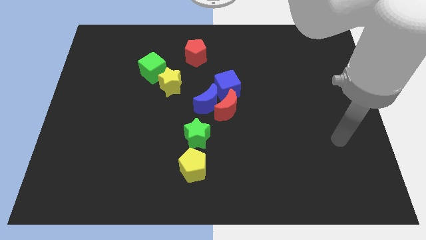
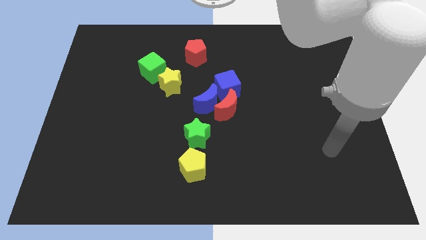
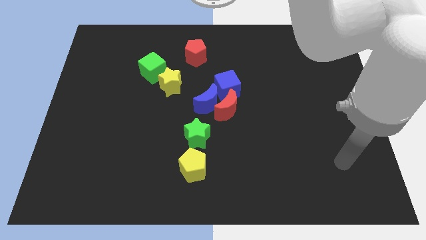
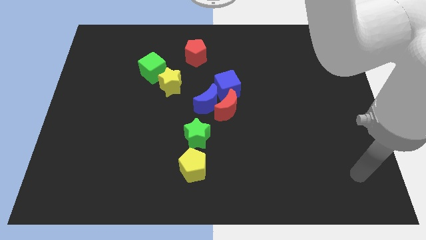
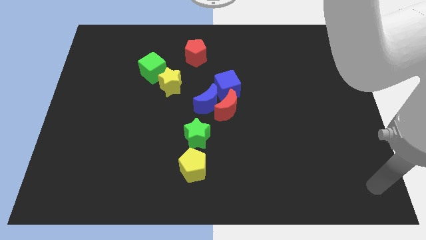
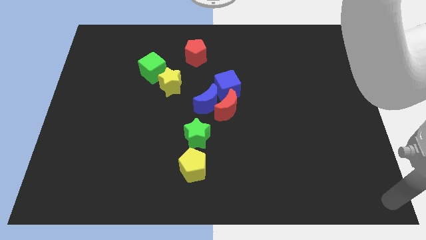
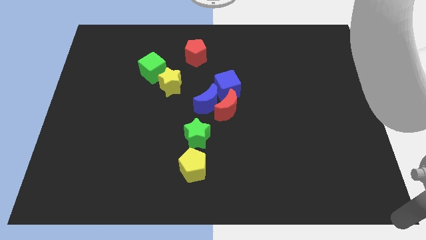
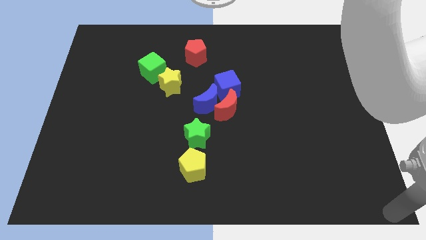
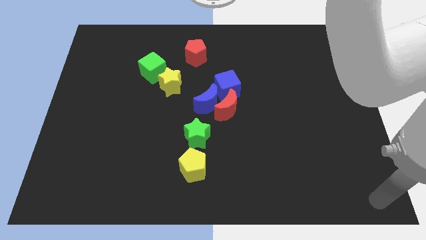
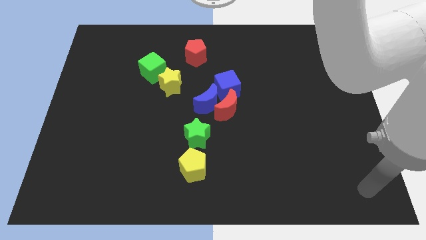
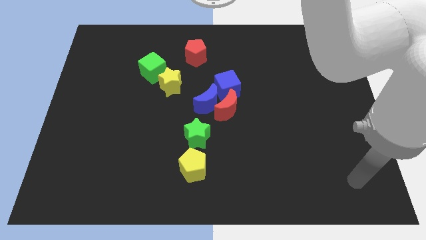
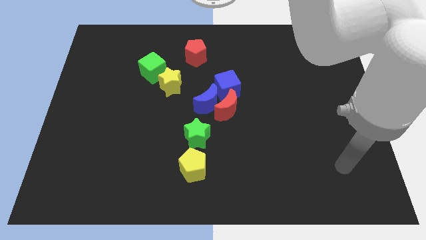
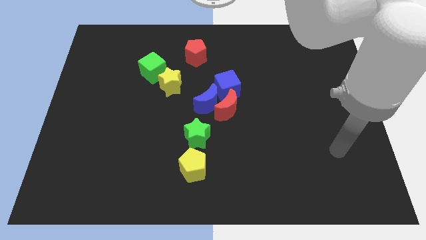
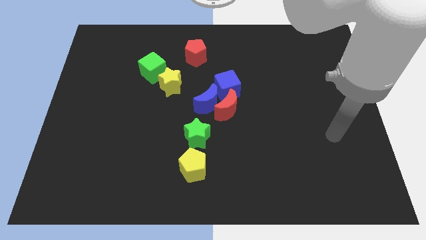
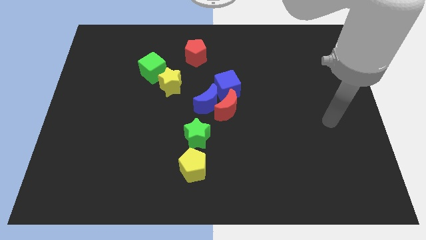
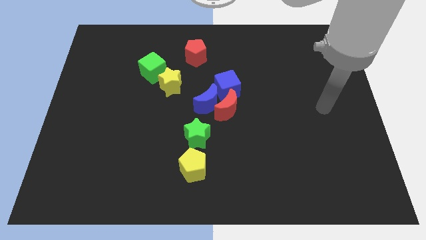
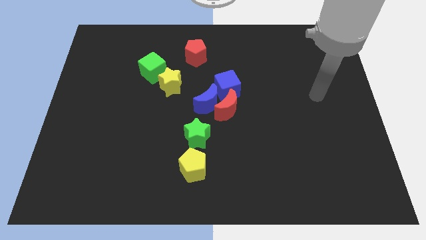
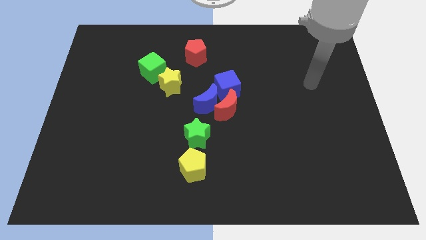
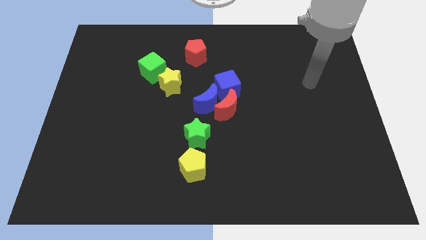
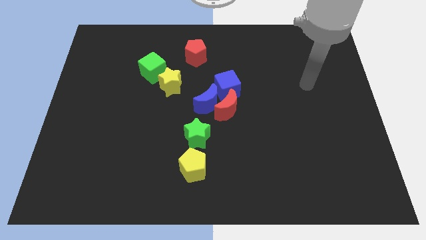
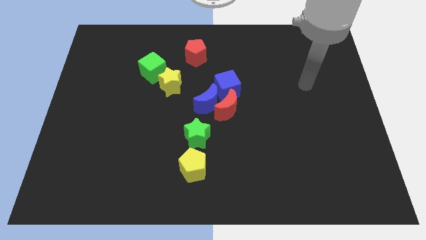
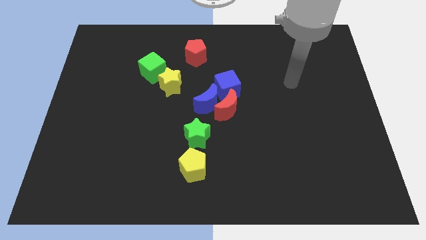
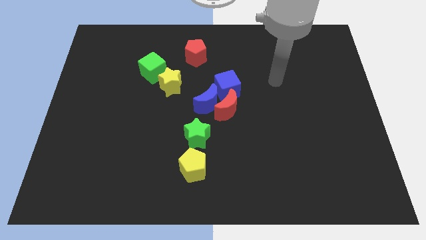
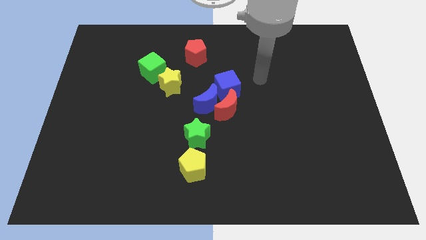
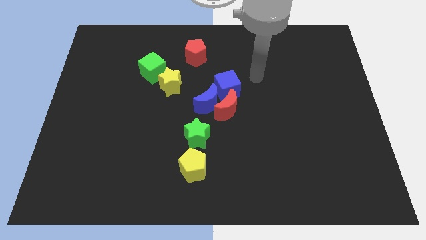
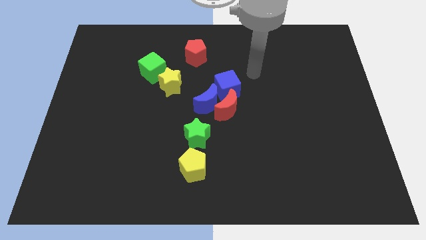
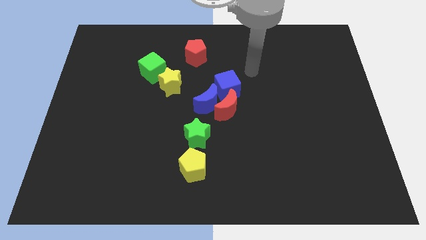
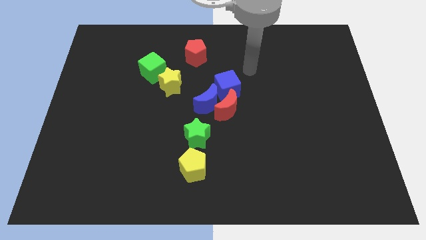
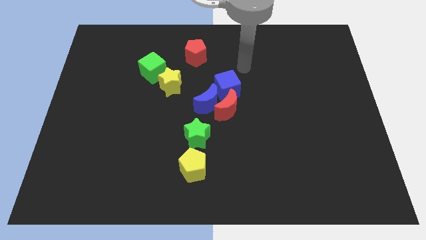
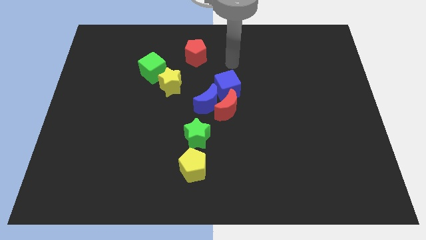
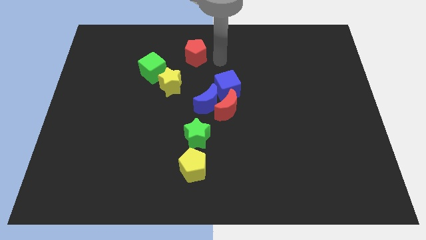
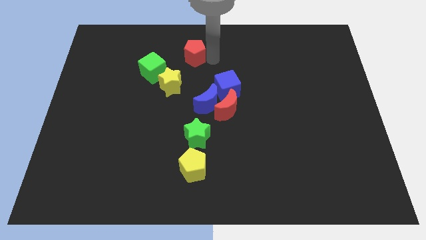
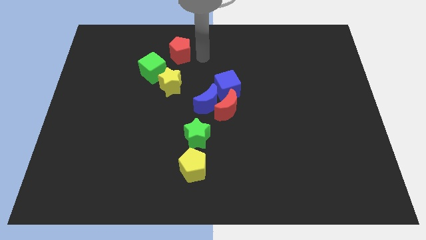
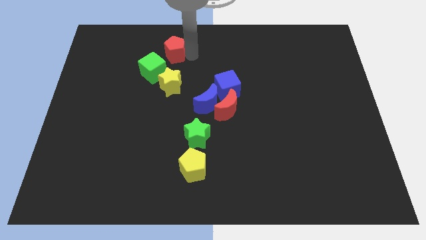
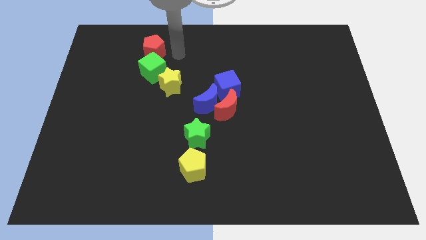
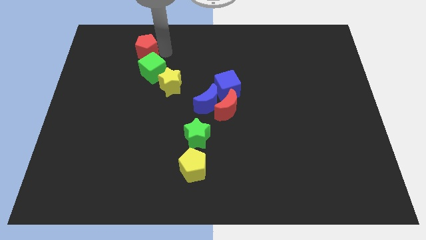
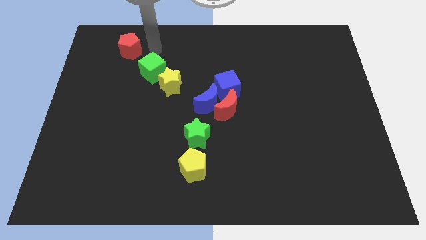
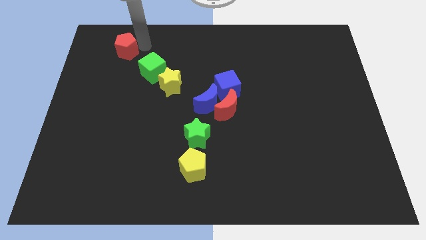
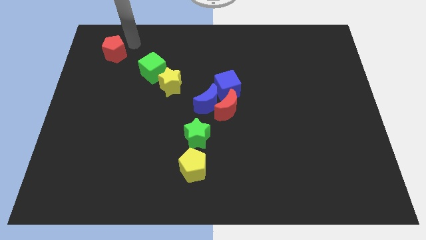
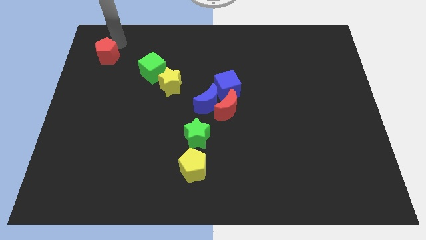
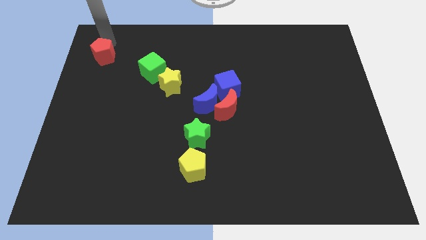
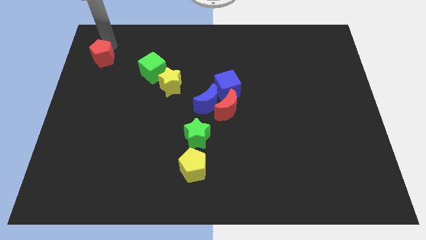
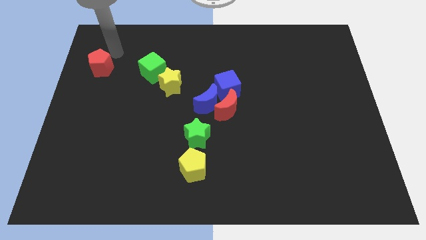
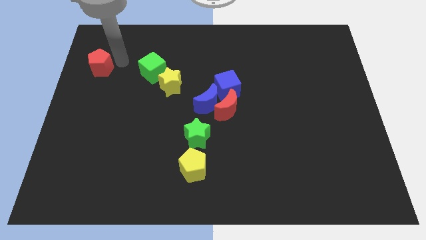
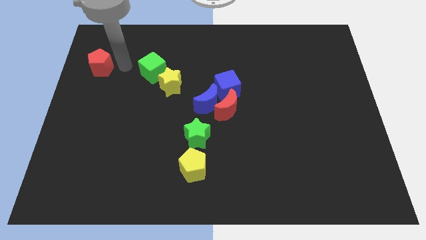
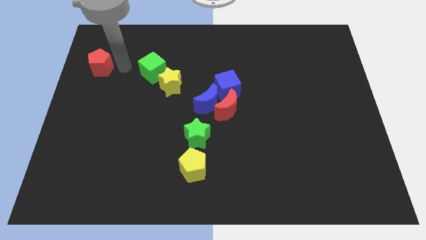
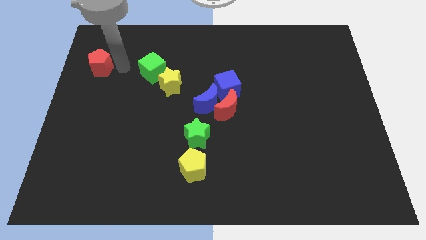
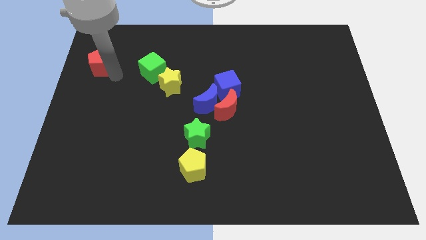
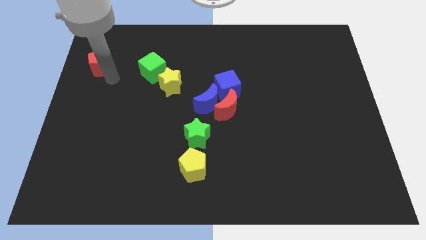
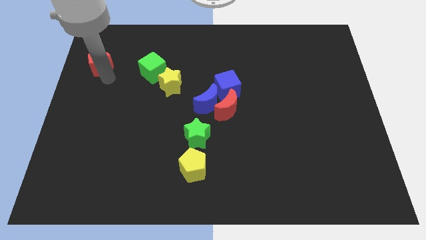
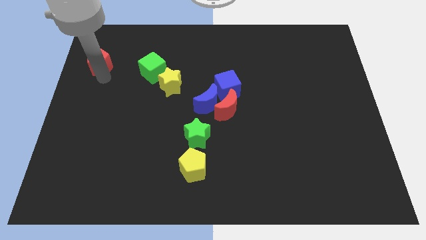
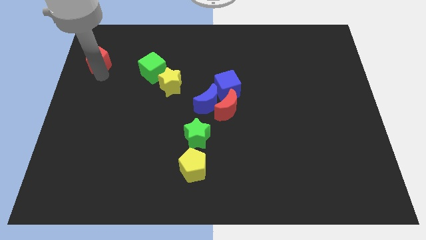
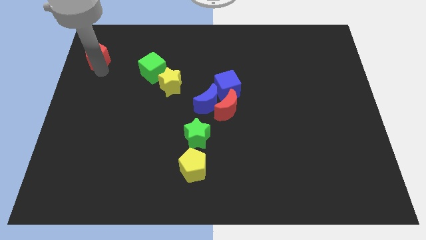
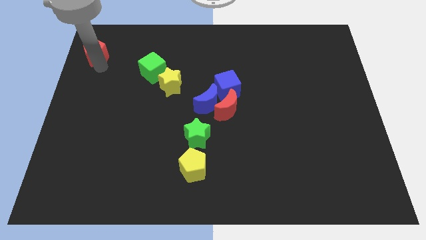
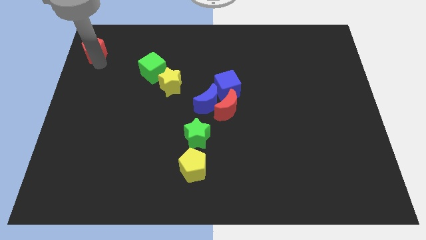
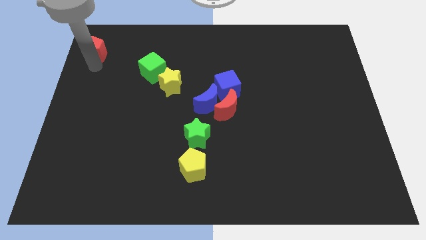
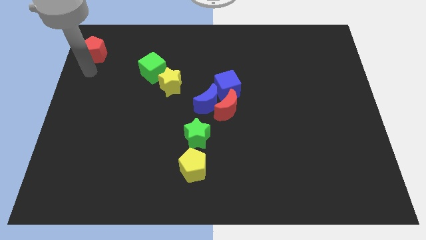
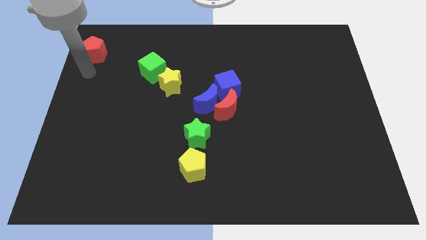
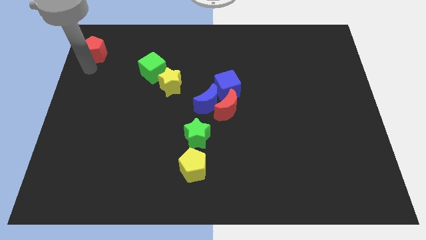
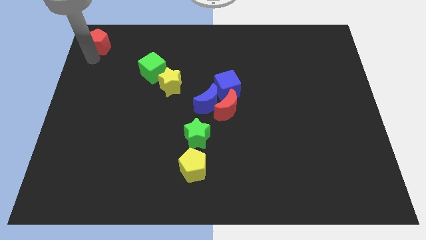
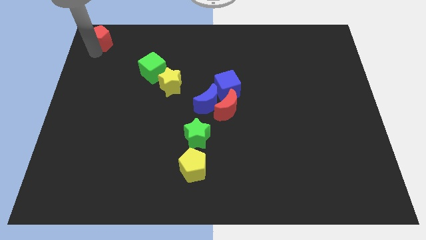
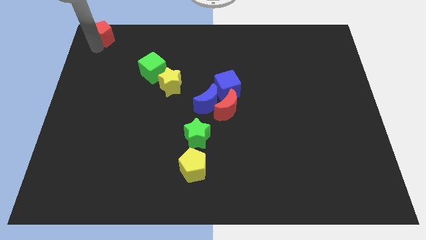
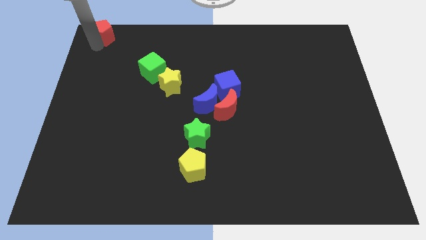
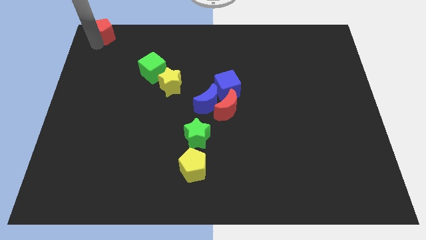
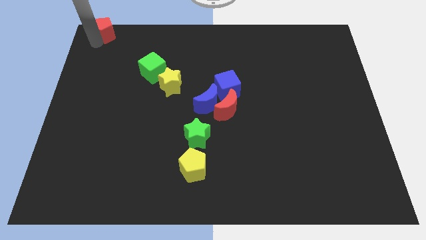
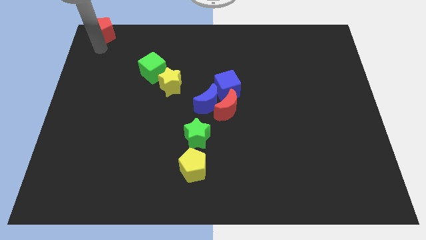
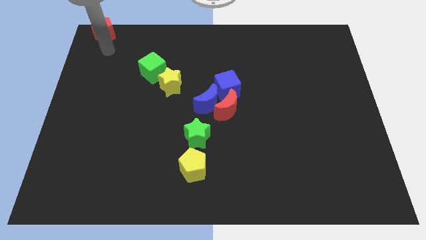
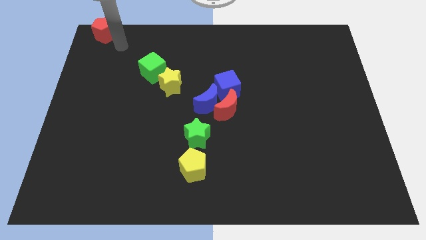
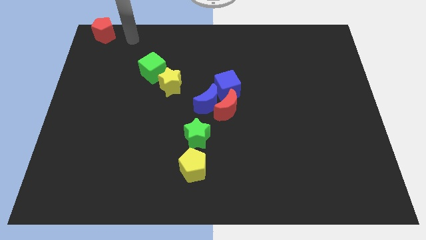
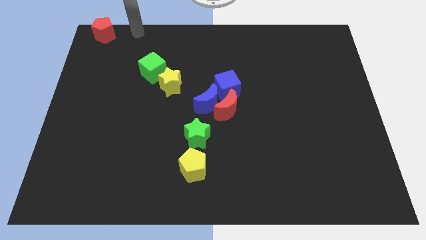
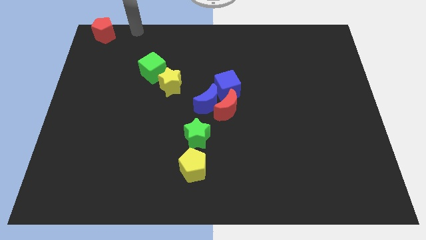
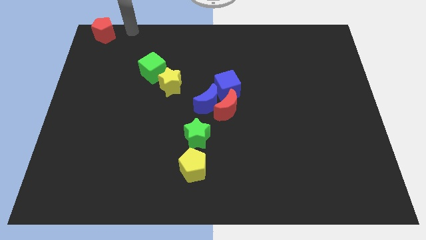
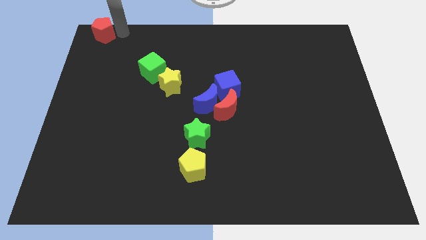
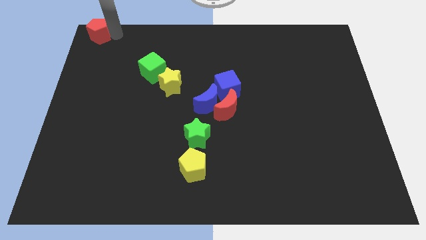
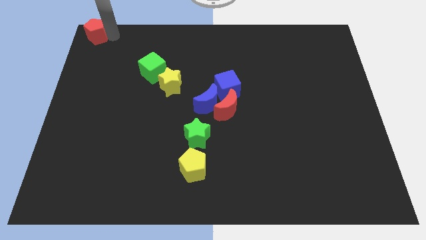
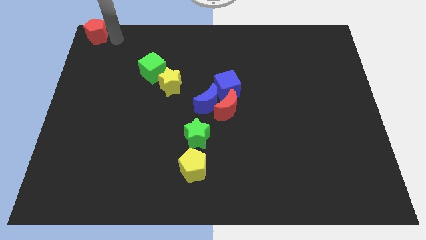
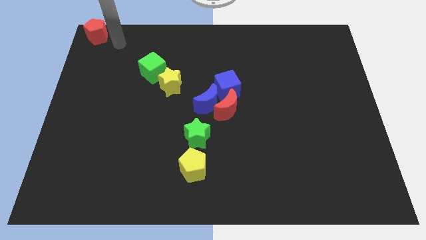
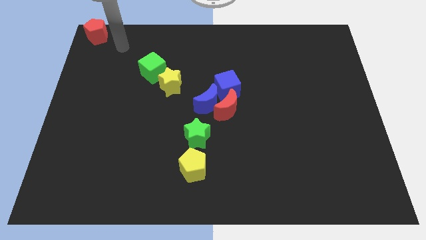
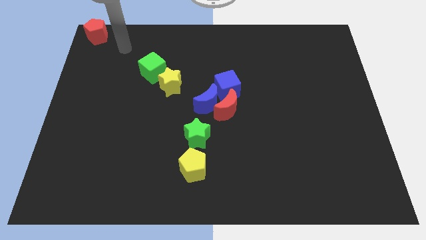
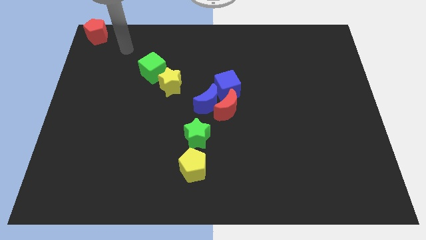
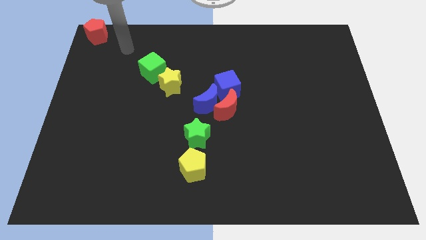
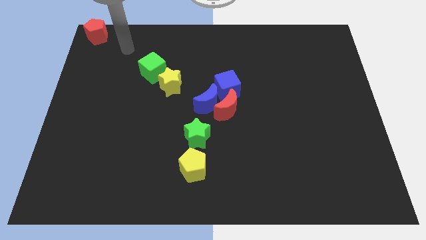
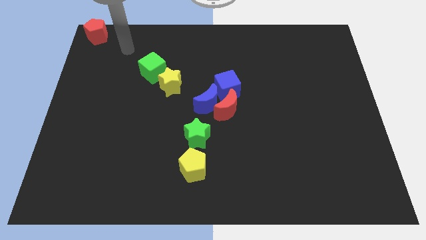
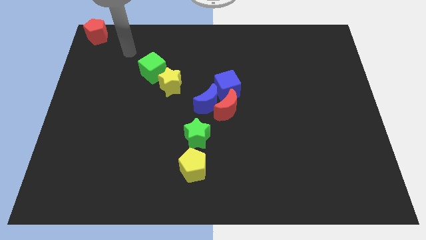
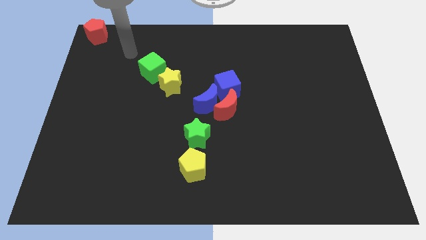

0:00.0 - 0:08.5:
move the red pentagon to the top left corner

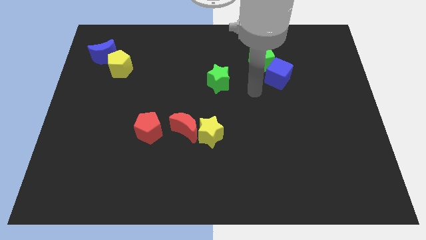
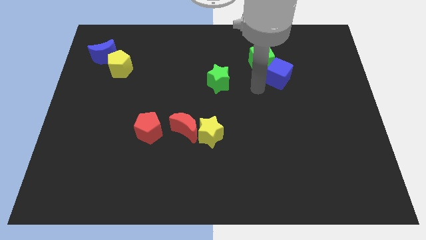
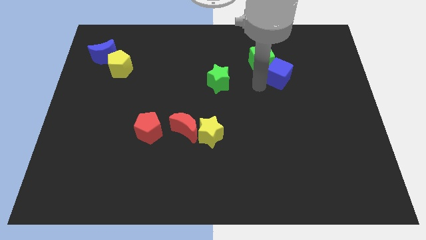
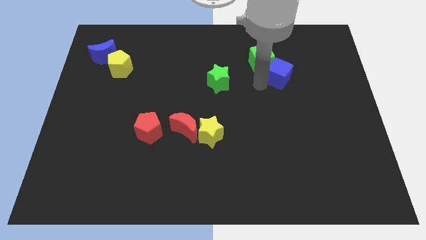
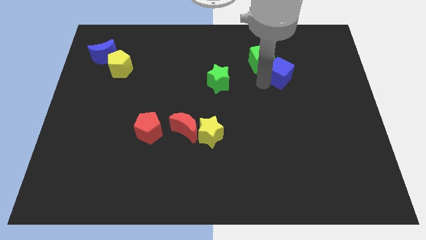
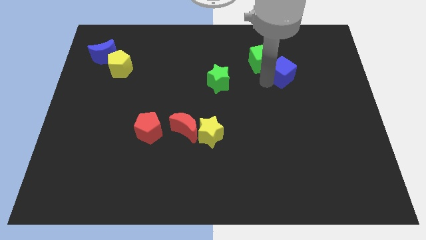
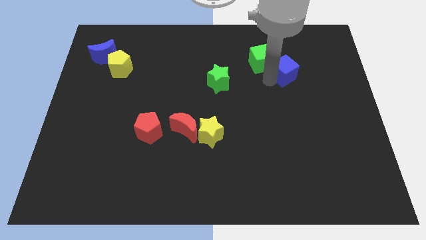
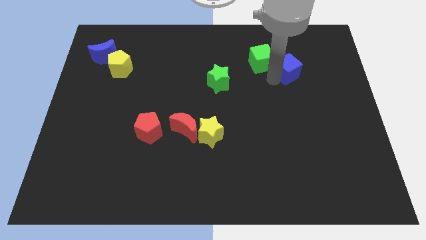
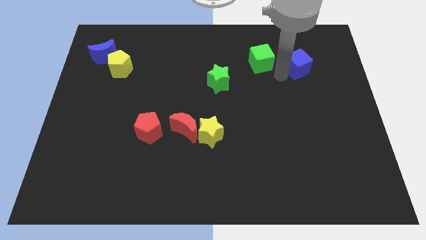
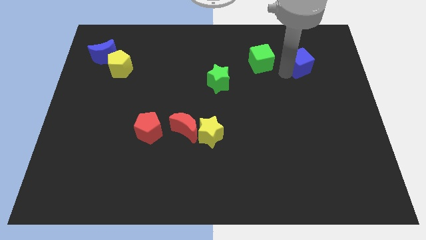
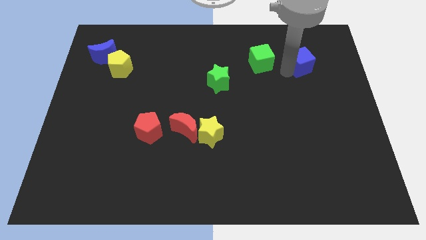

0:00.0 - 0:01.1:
place blue cube to the right of green cube
